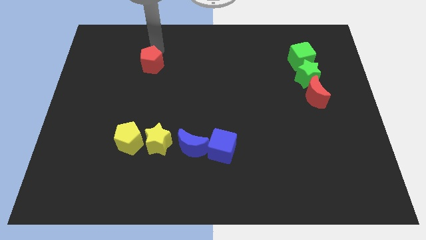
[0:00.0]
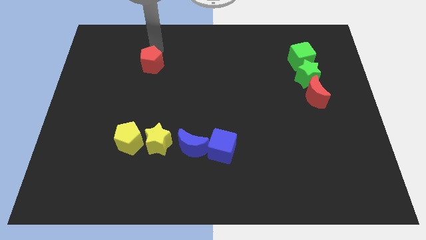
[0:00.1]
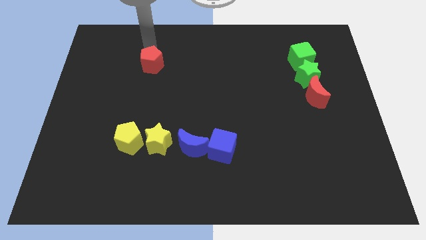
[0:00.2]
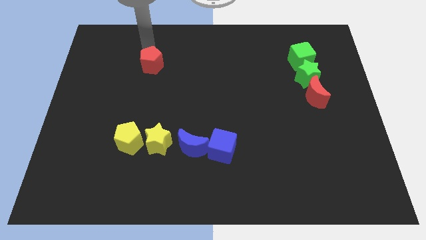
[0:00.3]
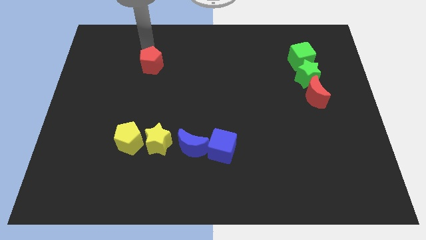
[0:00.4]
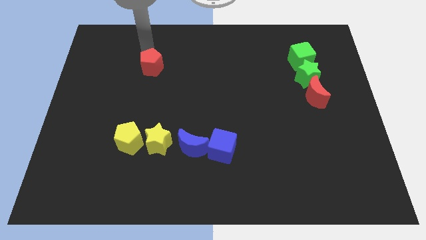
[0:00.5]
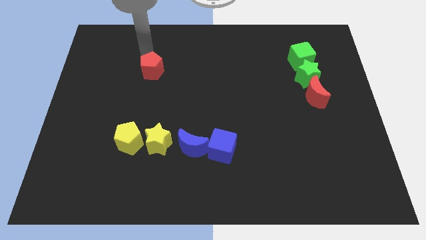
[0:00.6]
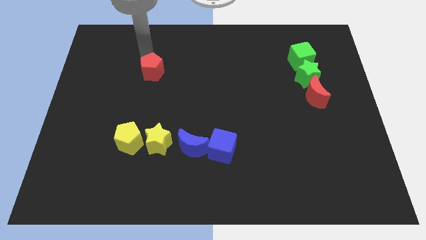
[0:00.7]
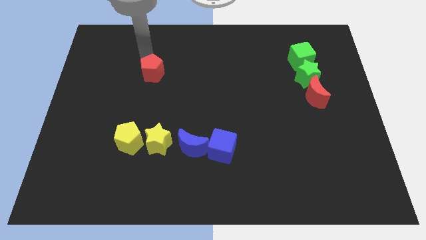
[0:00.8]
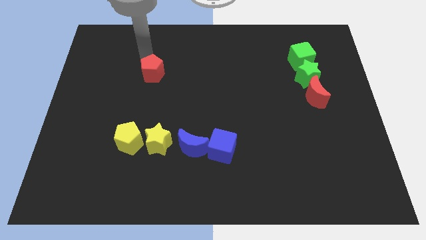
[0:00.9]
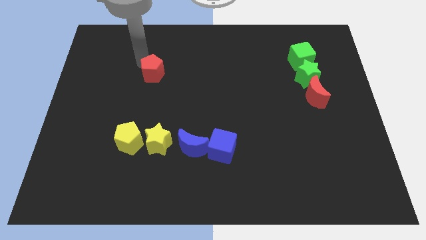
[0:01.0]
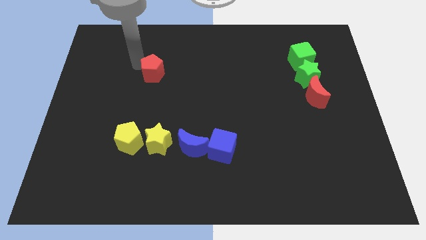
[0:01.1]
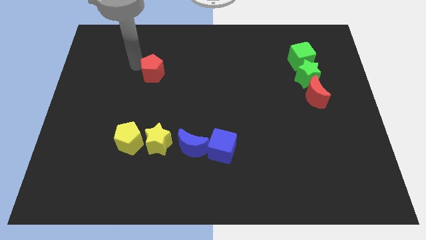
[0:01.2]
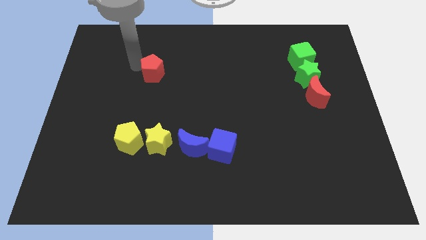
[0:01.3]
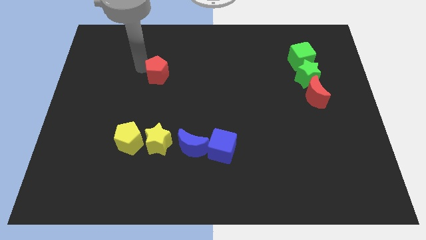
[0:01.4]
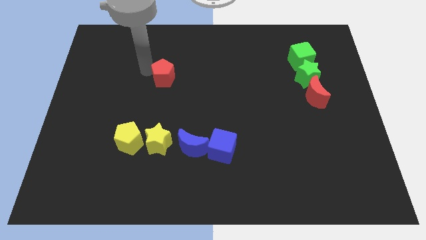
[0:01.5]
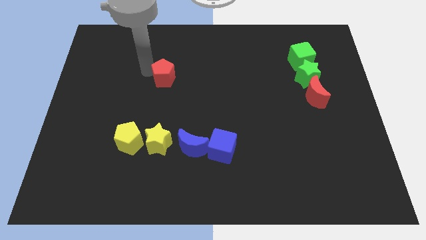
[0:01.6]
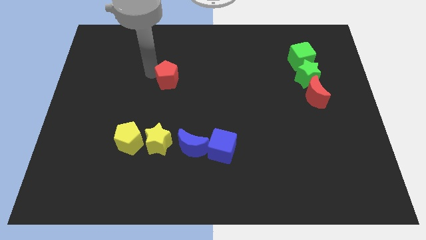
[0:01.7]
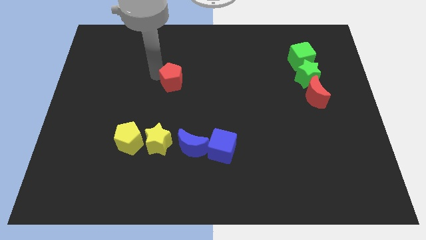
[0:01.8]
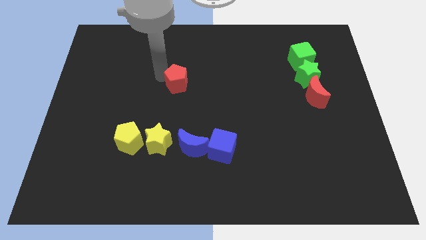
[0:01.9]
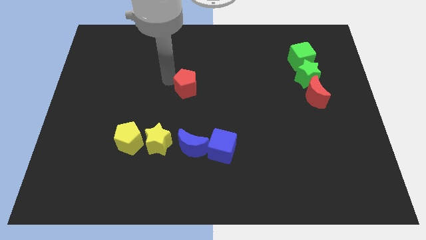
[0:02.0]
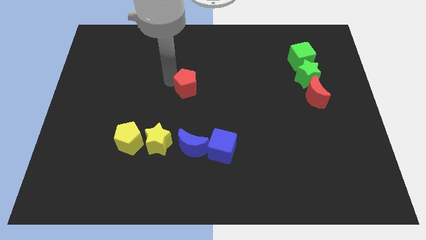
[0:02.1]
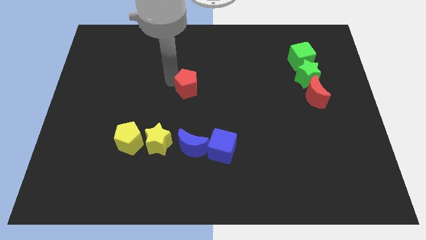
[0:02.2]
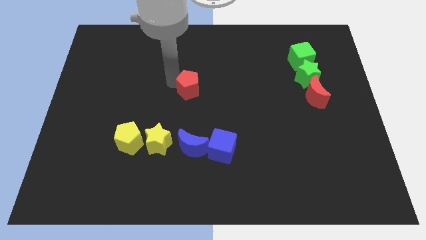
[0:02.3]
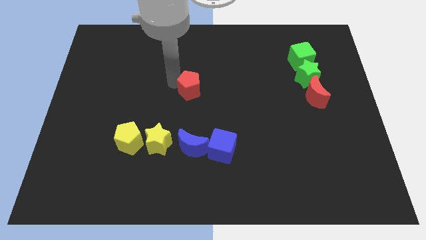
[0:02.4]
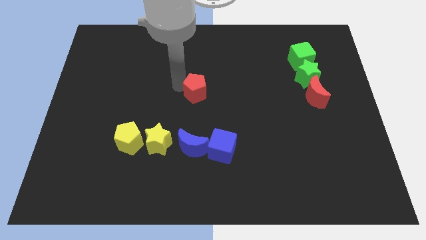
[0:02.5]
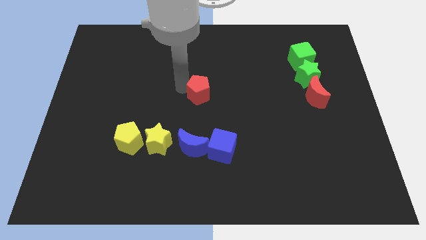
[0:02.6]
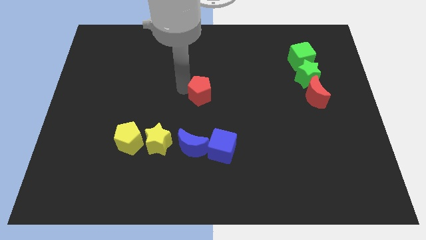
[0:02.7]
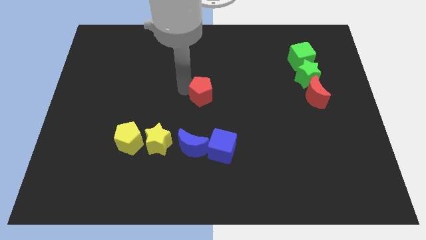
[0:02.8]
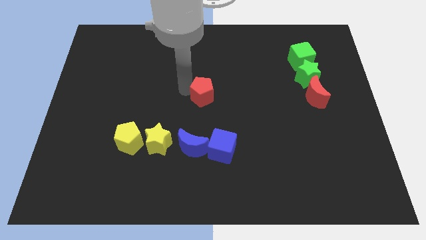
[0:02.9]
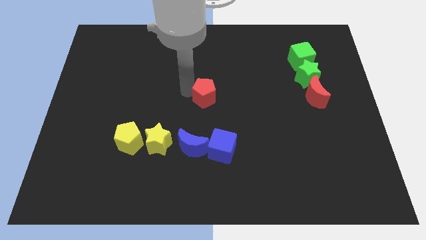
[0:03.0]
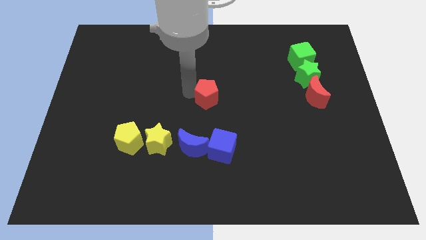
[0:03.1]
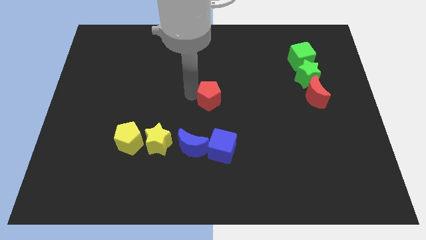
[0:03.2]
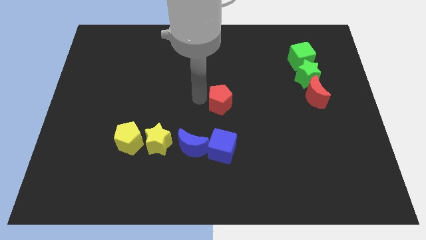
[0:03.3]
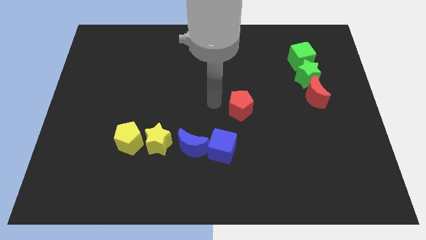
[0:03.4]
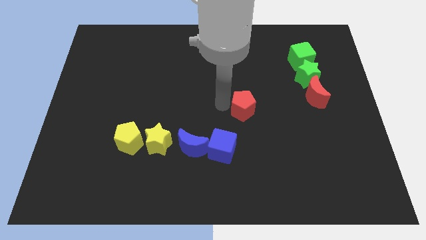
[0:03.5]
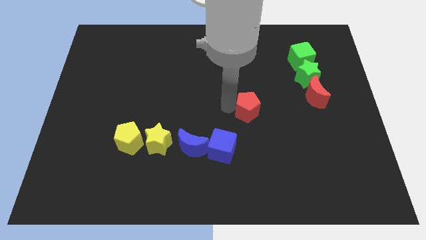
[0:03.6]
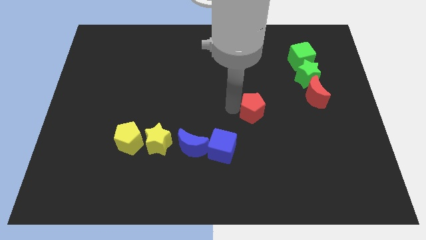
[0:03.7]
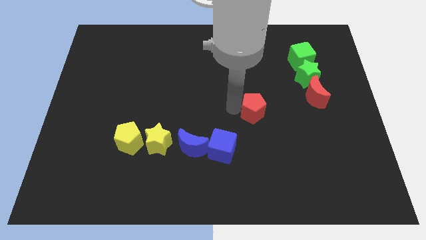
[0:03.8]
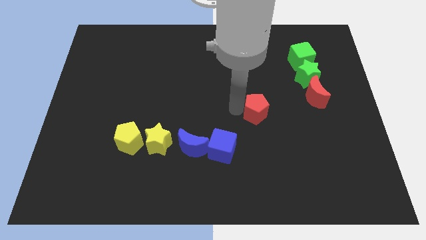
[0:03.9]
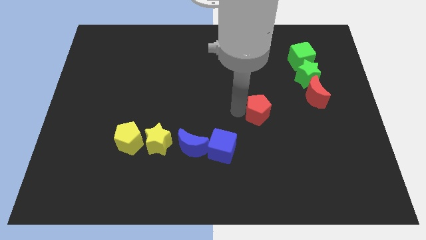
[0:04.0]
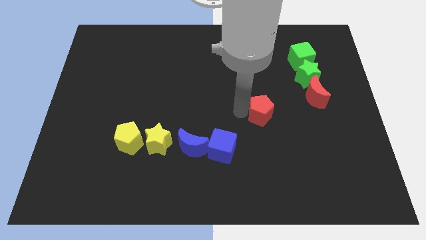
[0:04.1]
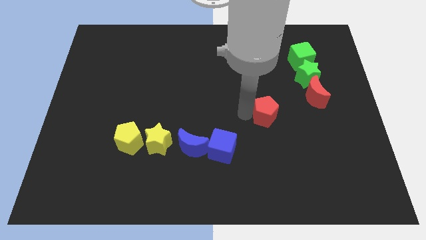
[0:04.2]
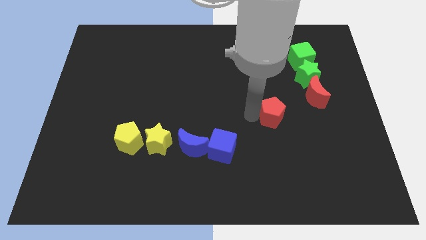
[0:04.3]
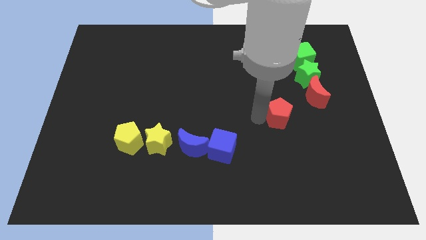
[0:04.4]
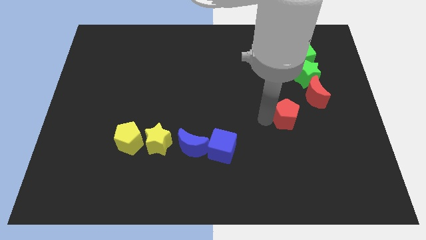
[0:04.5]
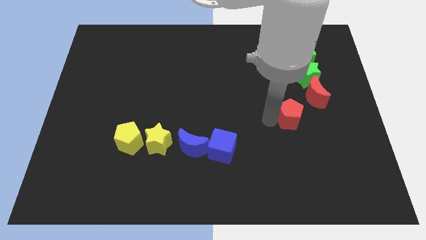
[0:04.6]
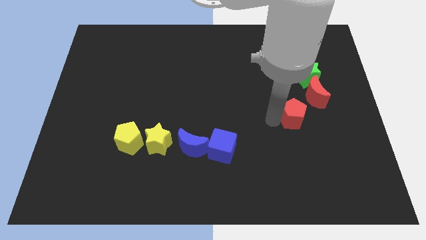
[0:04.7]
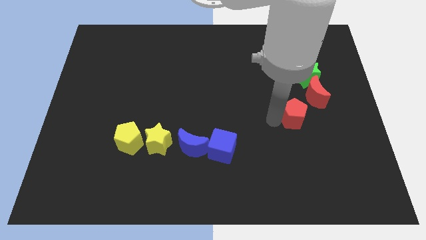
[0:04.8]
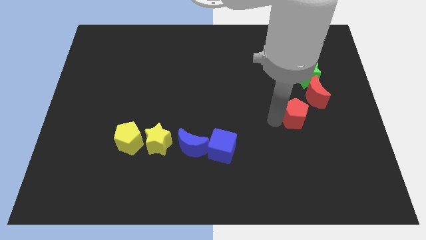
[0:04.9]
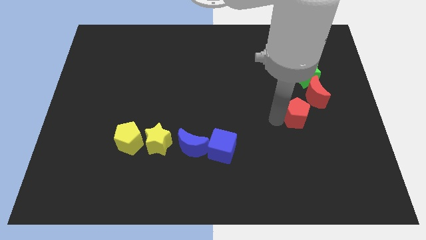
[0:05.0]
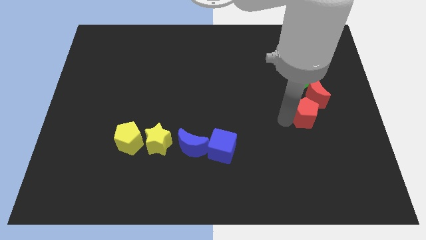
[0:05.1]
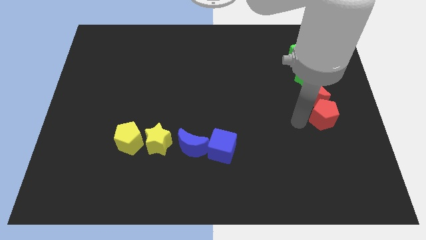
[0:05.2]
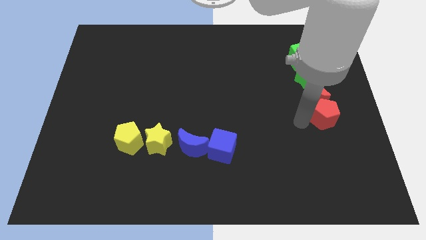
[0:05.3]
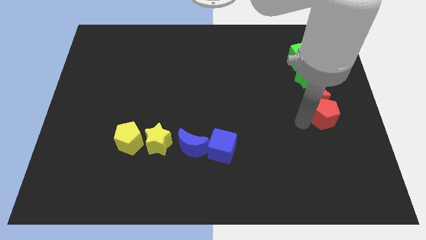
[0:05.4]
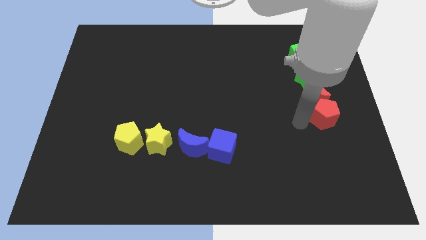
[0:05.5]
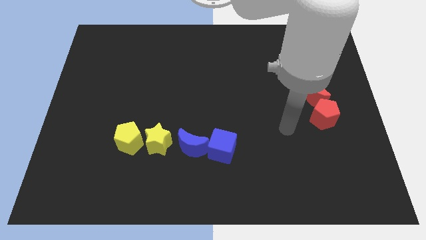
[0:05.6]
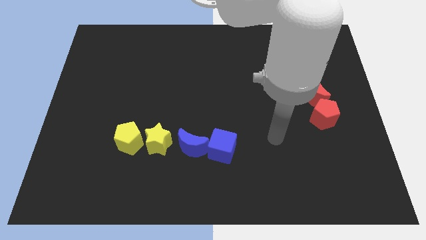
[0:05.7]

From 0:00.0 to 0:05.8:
drag red pentagon below red moon

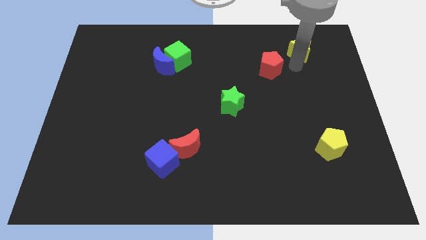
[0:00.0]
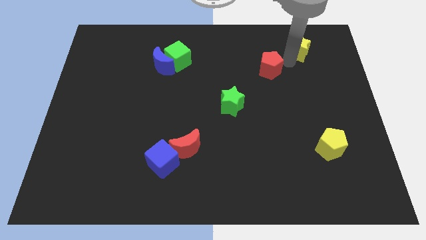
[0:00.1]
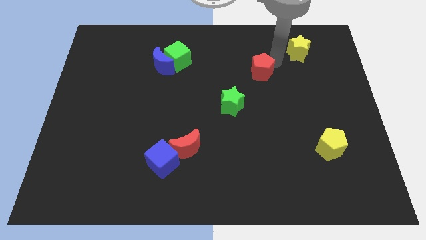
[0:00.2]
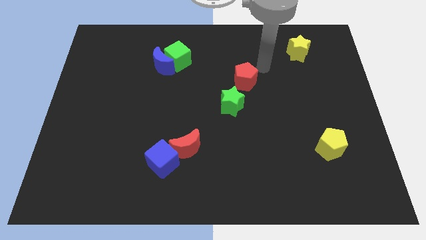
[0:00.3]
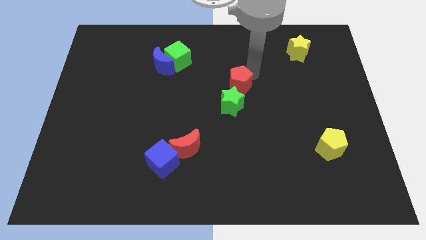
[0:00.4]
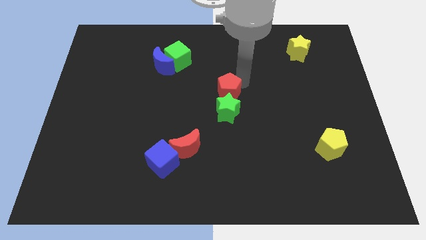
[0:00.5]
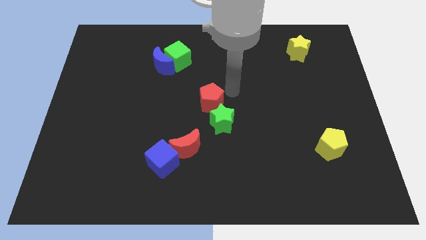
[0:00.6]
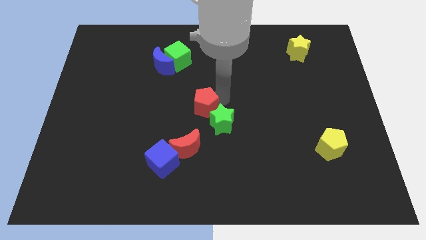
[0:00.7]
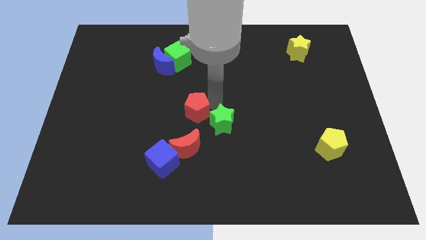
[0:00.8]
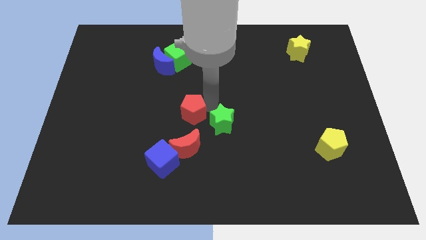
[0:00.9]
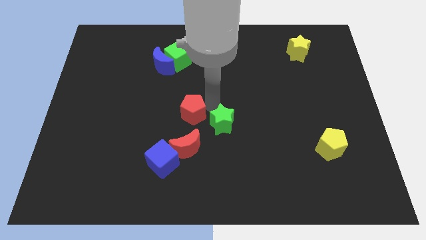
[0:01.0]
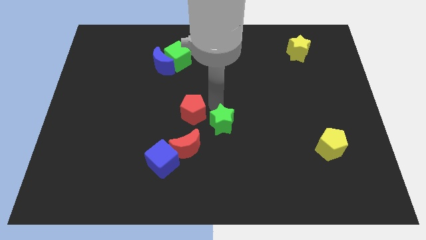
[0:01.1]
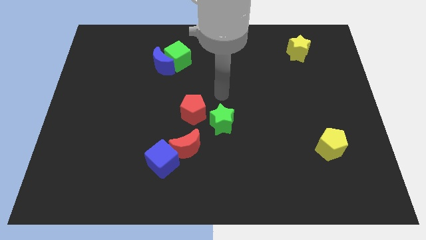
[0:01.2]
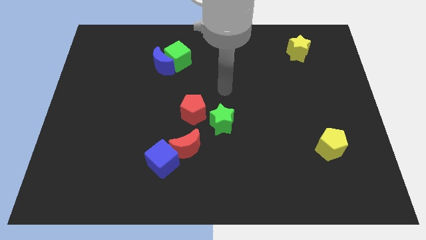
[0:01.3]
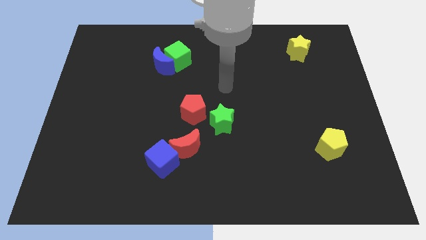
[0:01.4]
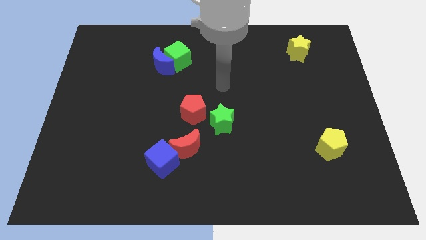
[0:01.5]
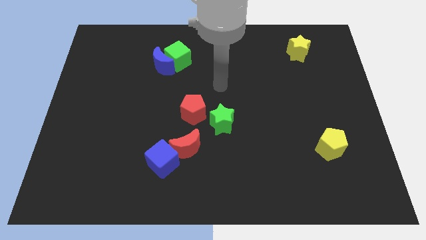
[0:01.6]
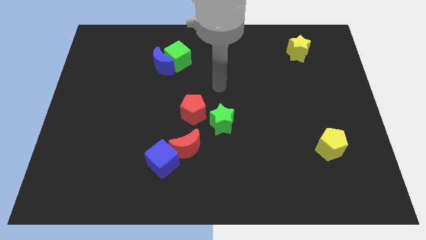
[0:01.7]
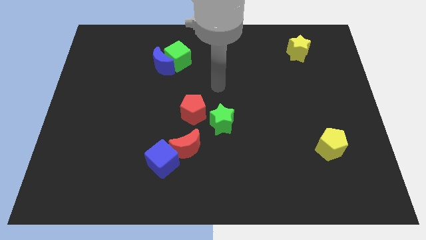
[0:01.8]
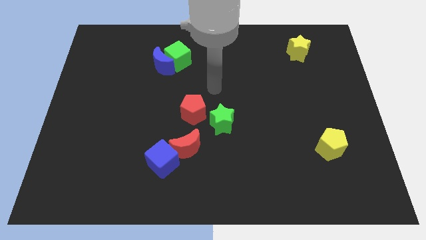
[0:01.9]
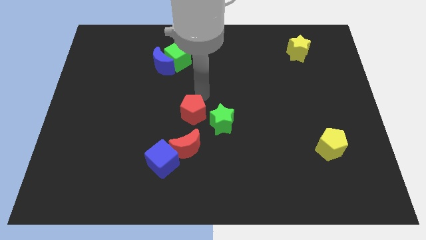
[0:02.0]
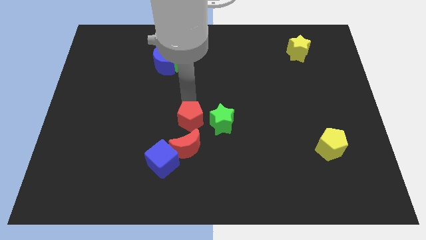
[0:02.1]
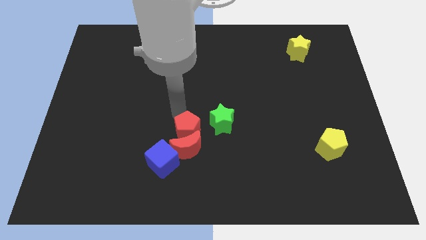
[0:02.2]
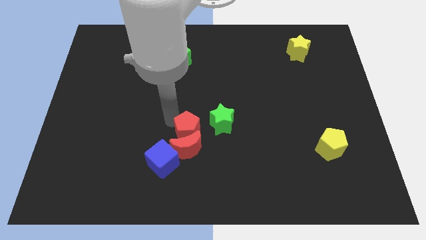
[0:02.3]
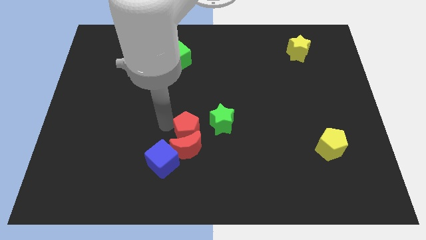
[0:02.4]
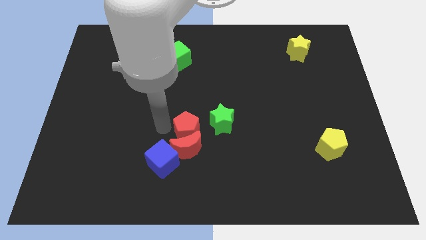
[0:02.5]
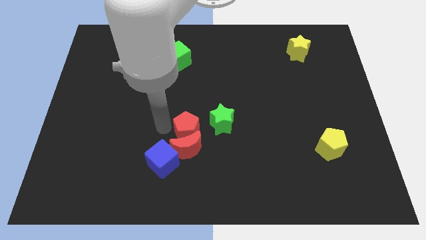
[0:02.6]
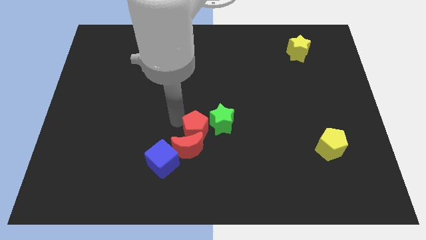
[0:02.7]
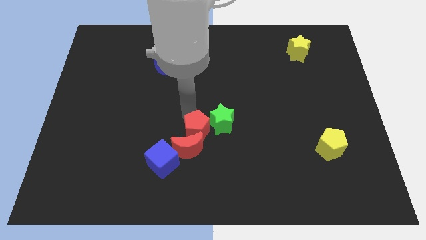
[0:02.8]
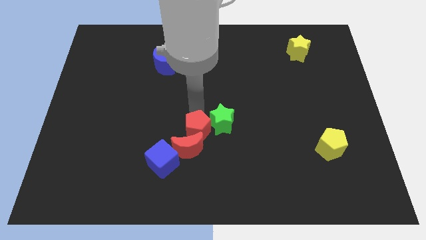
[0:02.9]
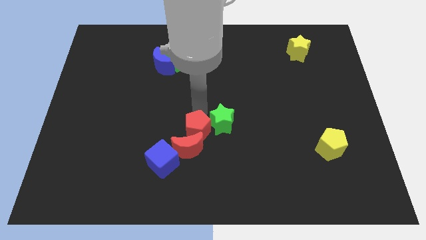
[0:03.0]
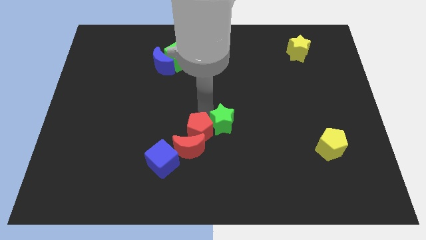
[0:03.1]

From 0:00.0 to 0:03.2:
place red pentagon above the red moon
